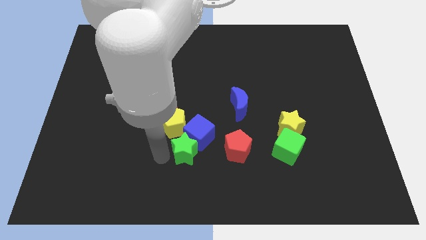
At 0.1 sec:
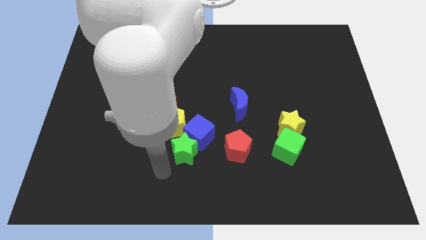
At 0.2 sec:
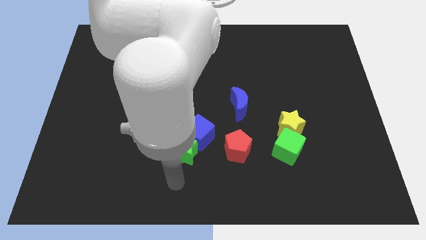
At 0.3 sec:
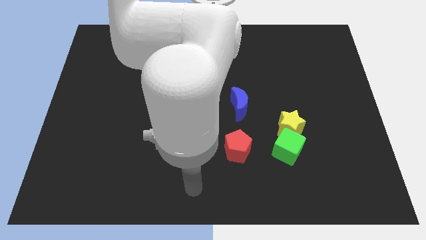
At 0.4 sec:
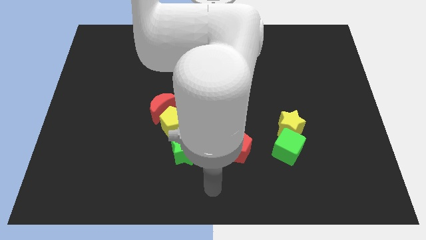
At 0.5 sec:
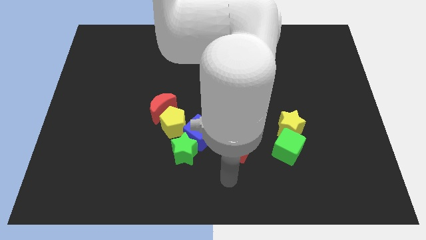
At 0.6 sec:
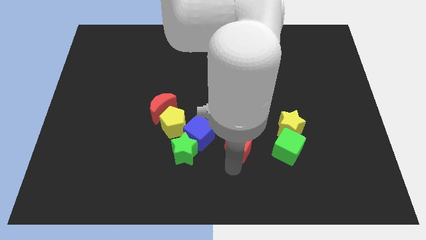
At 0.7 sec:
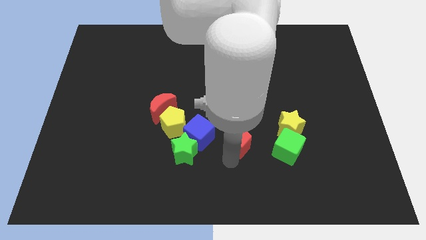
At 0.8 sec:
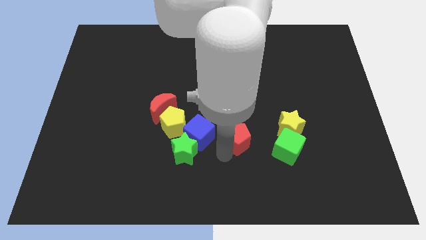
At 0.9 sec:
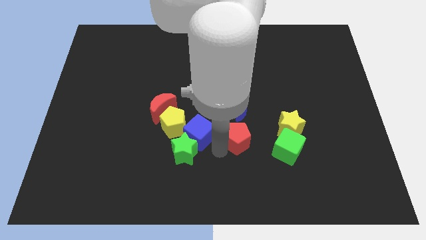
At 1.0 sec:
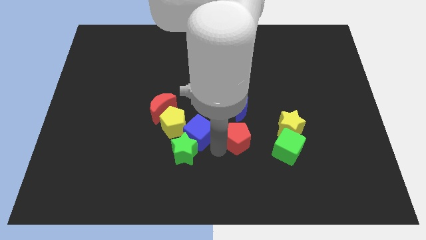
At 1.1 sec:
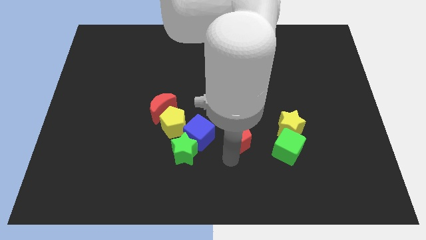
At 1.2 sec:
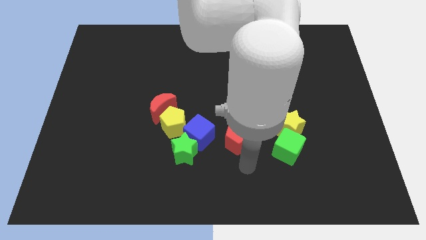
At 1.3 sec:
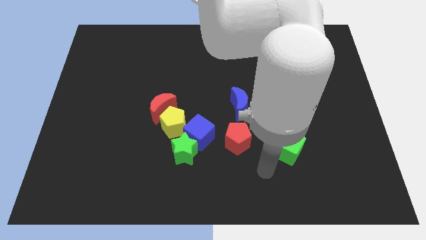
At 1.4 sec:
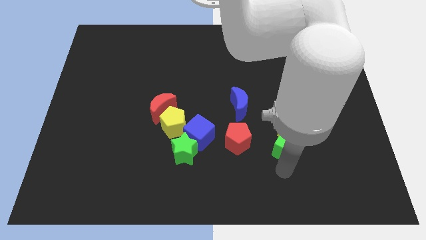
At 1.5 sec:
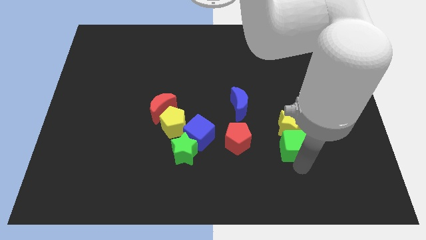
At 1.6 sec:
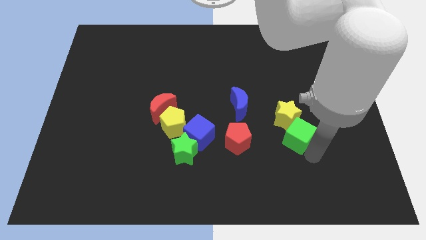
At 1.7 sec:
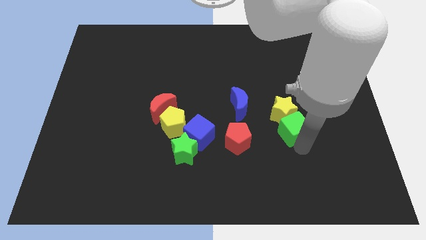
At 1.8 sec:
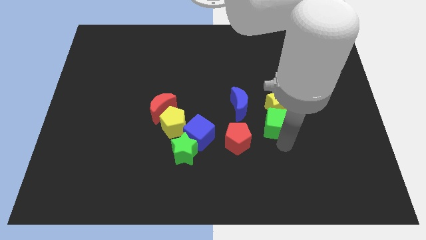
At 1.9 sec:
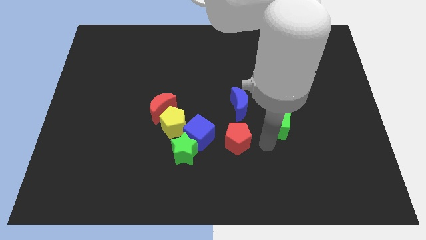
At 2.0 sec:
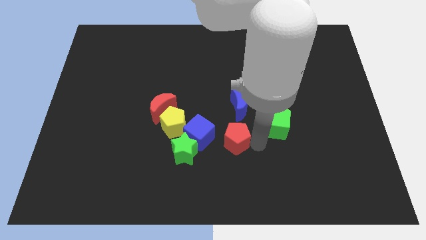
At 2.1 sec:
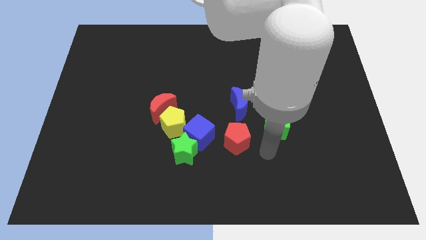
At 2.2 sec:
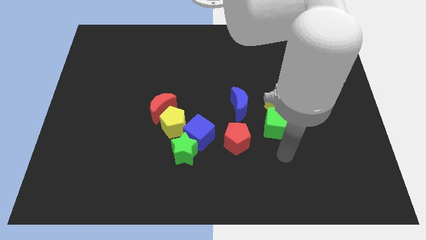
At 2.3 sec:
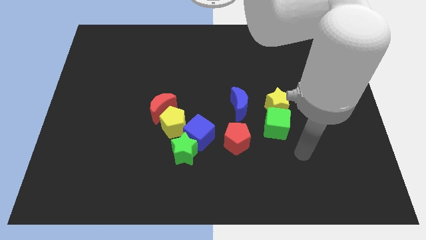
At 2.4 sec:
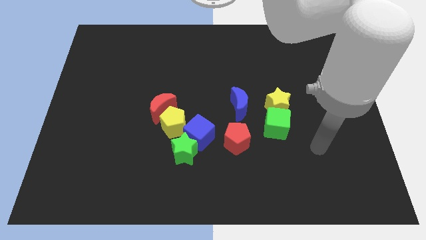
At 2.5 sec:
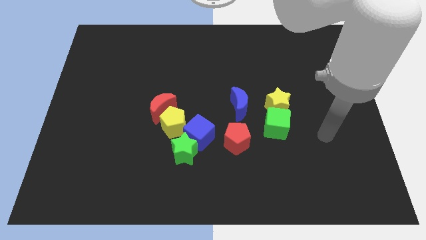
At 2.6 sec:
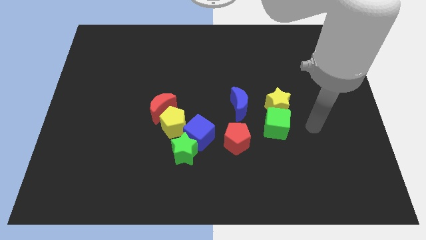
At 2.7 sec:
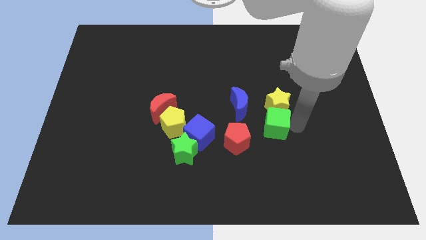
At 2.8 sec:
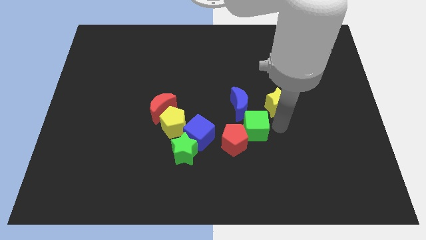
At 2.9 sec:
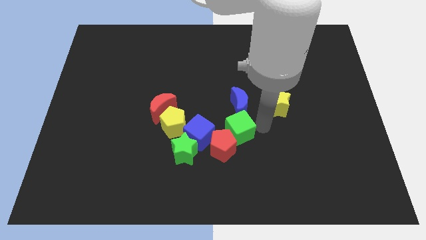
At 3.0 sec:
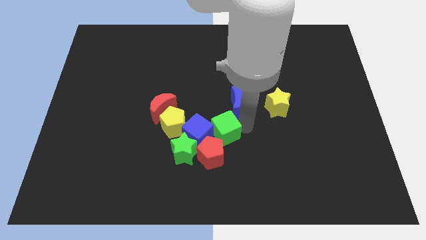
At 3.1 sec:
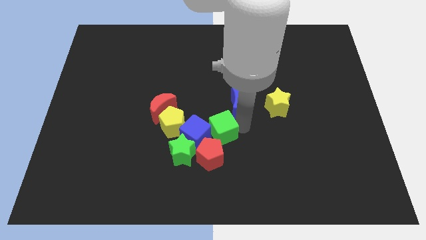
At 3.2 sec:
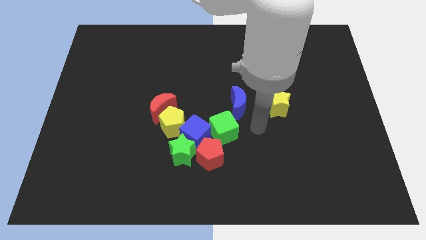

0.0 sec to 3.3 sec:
push the green cube and red pentagon into the group of blocks

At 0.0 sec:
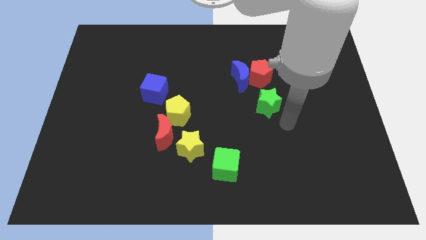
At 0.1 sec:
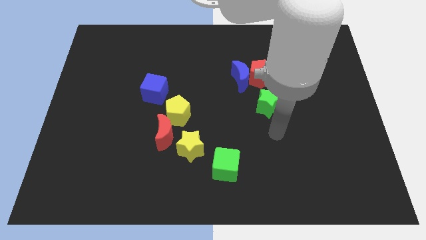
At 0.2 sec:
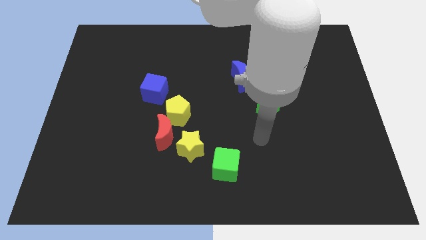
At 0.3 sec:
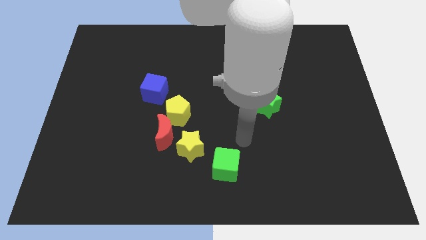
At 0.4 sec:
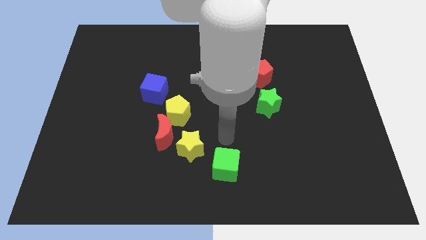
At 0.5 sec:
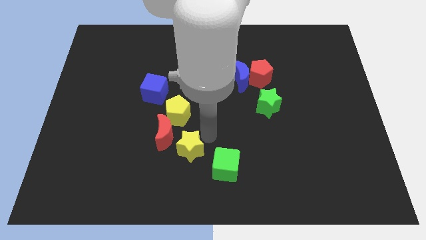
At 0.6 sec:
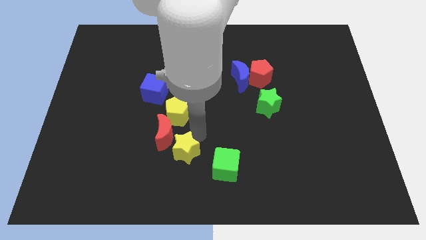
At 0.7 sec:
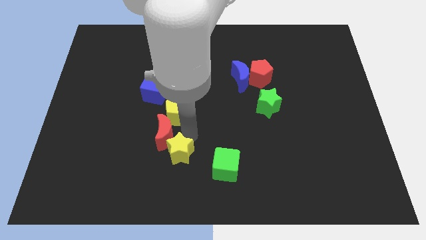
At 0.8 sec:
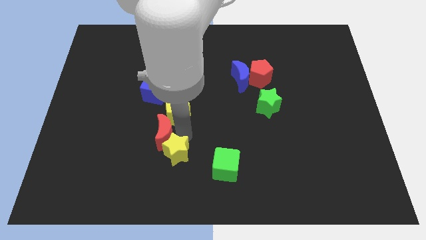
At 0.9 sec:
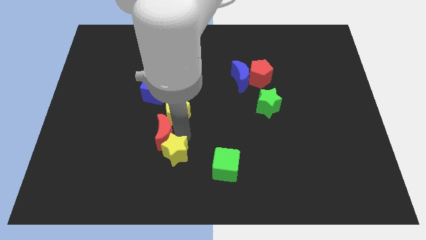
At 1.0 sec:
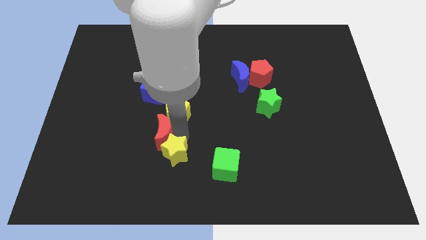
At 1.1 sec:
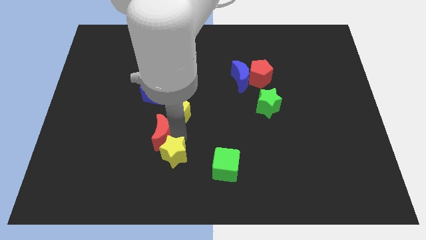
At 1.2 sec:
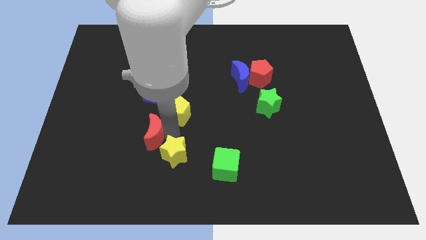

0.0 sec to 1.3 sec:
push the yellow star to the bottom of the red crescent

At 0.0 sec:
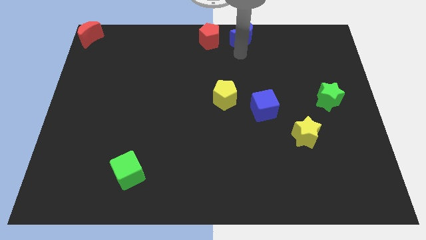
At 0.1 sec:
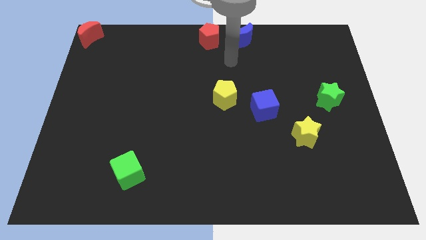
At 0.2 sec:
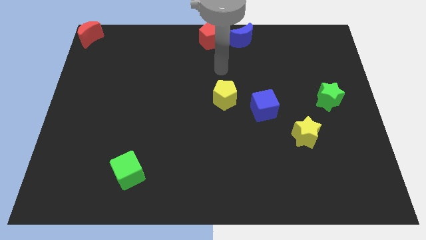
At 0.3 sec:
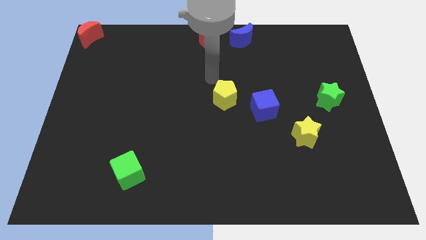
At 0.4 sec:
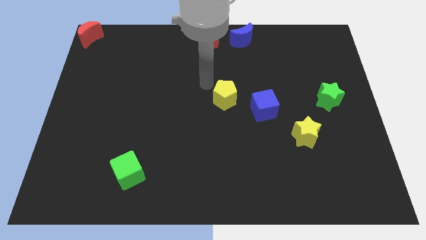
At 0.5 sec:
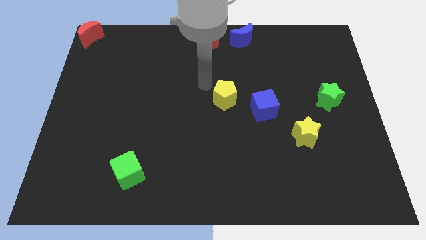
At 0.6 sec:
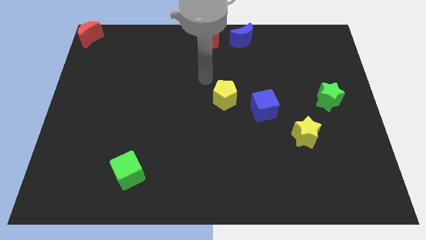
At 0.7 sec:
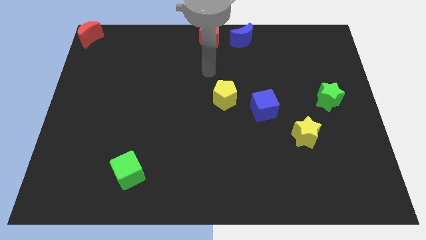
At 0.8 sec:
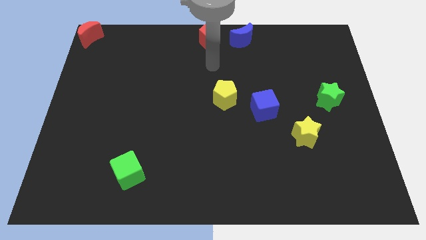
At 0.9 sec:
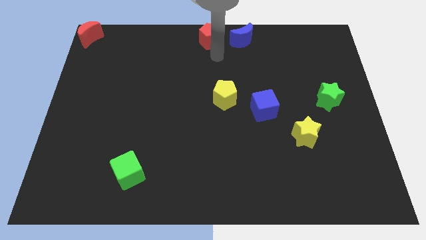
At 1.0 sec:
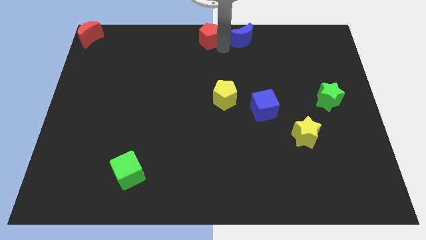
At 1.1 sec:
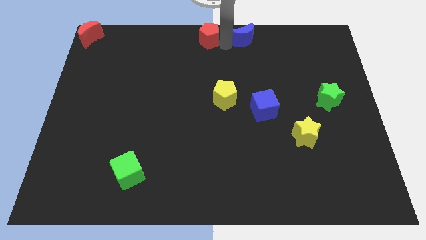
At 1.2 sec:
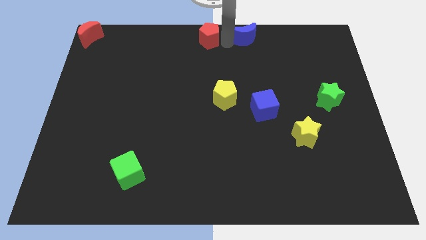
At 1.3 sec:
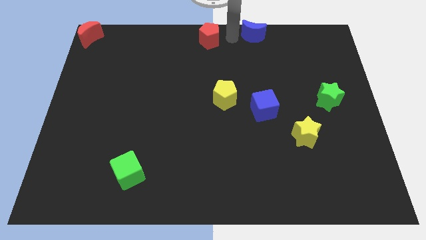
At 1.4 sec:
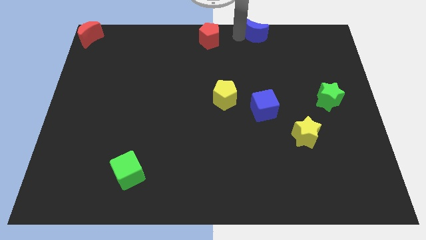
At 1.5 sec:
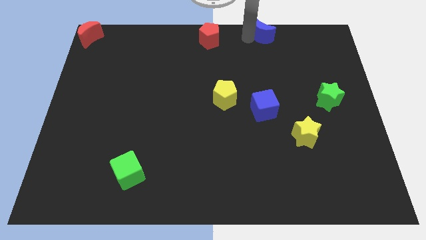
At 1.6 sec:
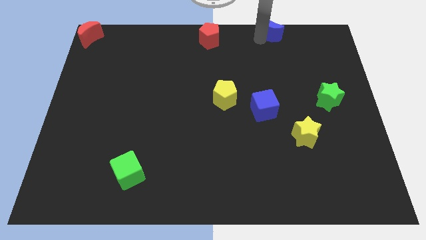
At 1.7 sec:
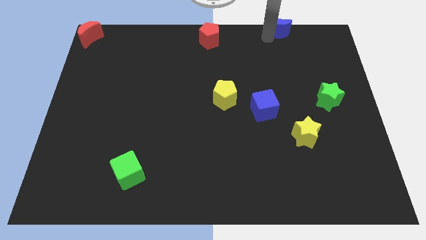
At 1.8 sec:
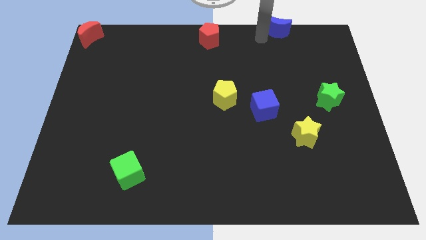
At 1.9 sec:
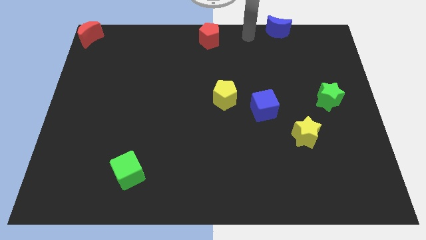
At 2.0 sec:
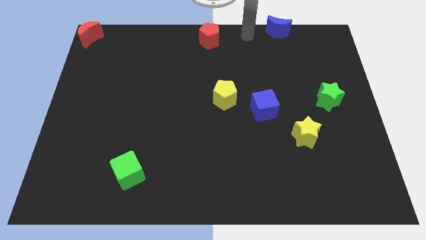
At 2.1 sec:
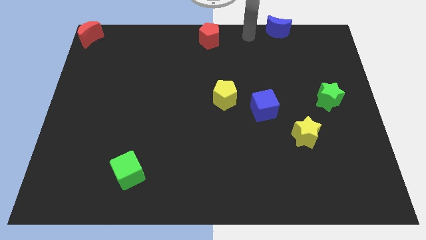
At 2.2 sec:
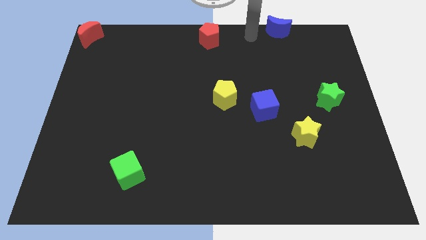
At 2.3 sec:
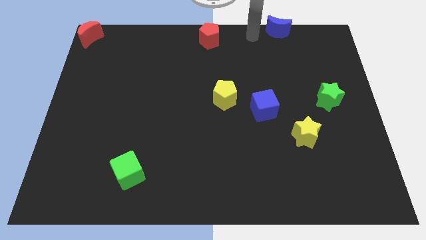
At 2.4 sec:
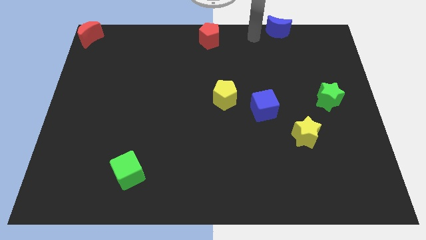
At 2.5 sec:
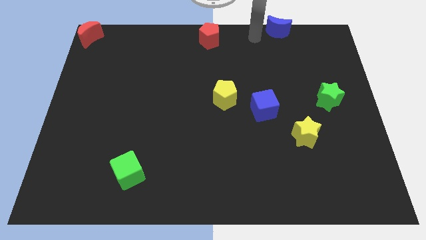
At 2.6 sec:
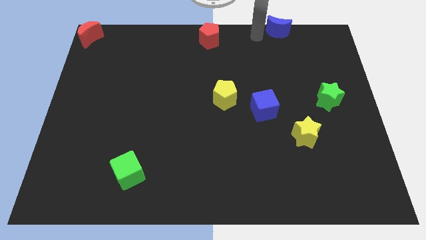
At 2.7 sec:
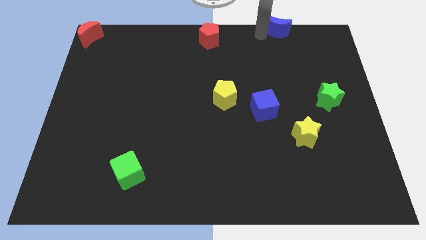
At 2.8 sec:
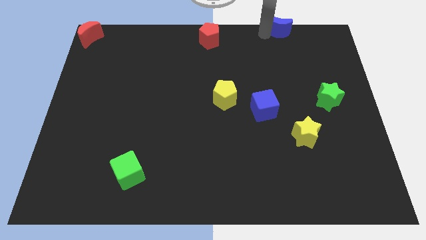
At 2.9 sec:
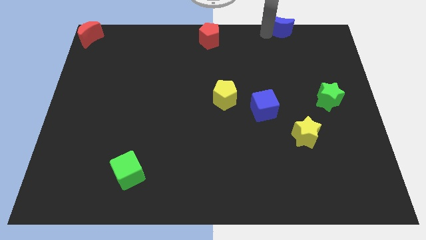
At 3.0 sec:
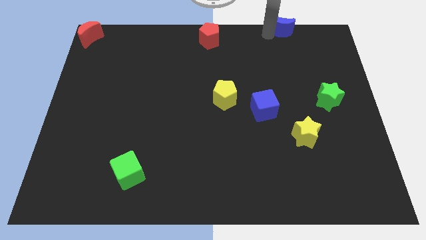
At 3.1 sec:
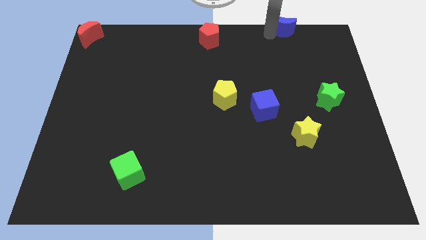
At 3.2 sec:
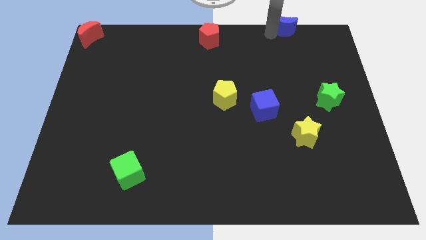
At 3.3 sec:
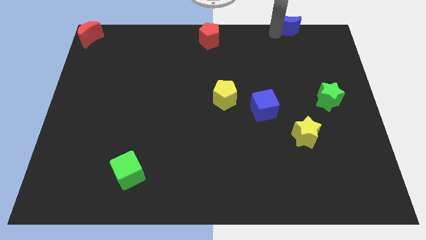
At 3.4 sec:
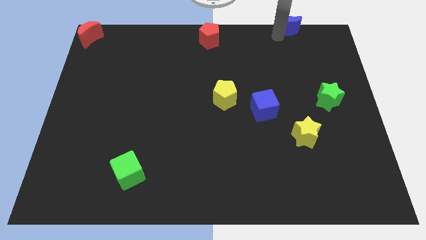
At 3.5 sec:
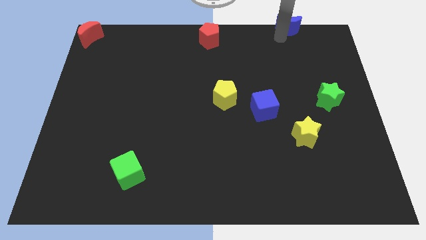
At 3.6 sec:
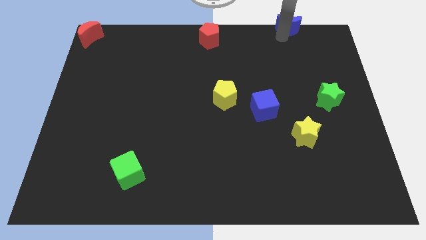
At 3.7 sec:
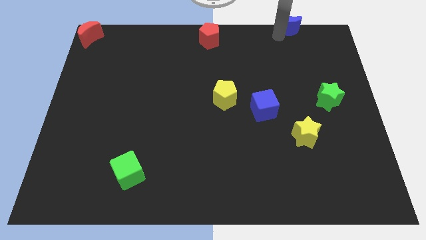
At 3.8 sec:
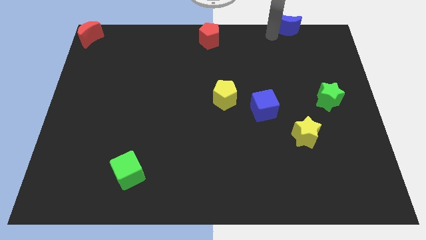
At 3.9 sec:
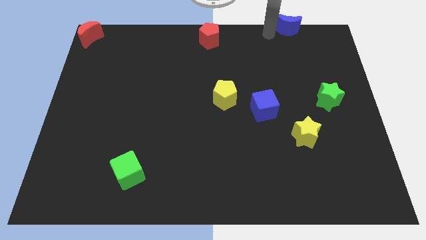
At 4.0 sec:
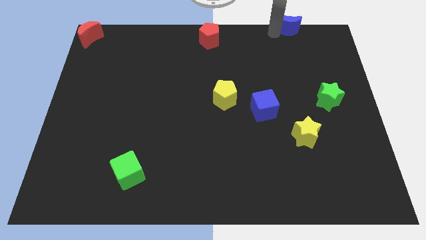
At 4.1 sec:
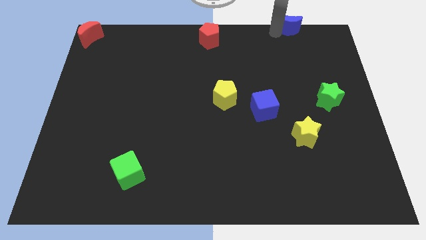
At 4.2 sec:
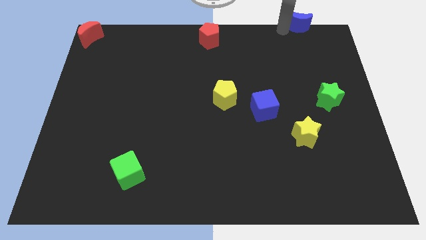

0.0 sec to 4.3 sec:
push the blue moon towards top

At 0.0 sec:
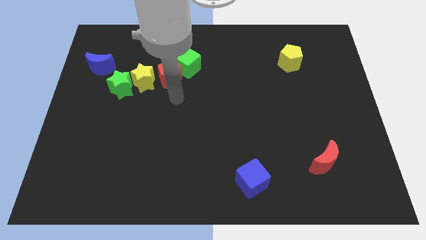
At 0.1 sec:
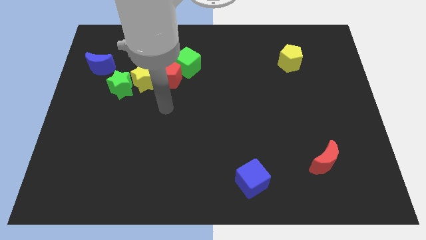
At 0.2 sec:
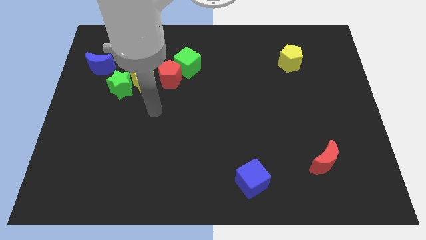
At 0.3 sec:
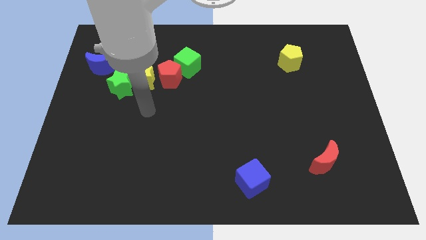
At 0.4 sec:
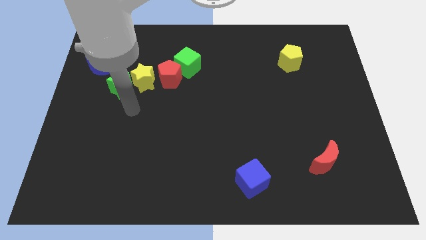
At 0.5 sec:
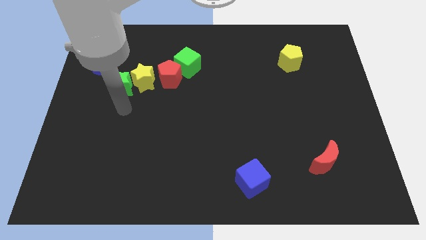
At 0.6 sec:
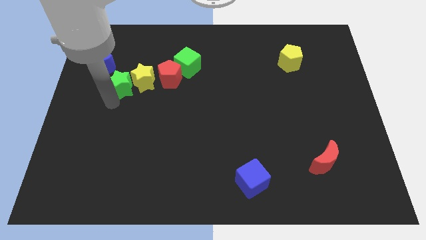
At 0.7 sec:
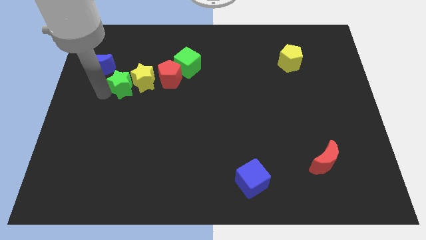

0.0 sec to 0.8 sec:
move arm near green star
